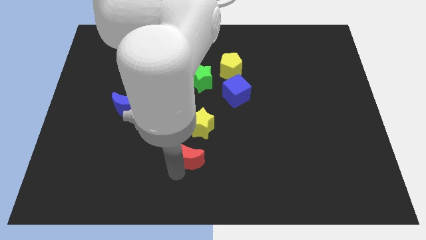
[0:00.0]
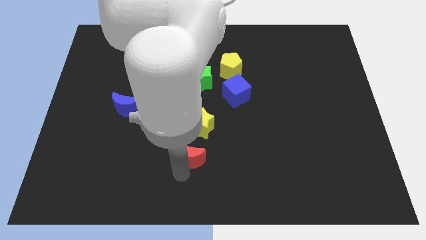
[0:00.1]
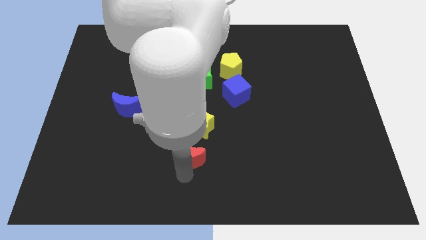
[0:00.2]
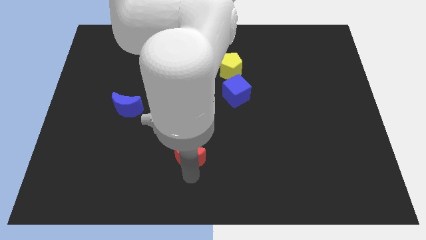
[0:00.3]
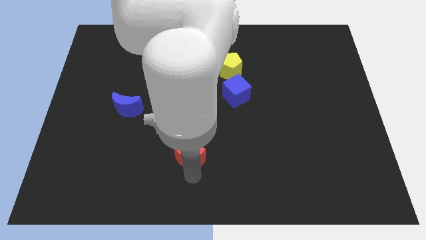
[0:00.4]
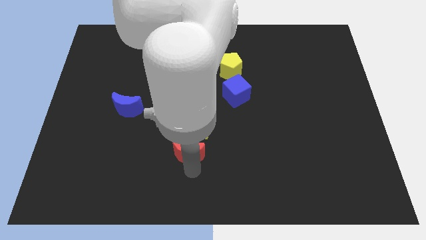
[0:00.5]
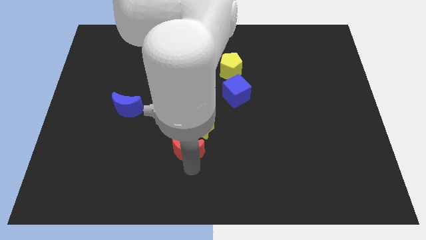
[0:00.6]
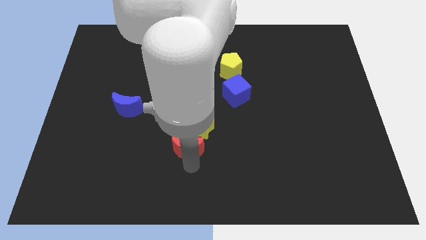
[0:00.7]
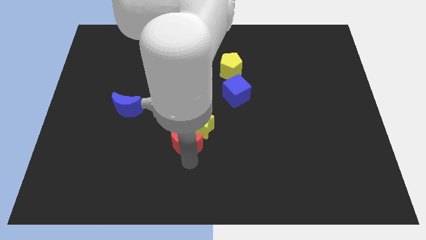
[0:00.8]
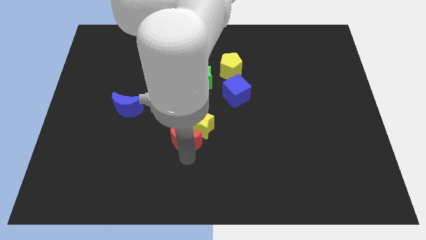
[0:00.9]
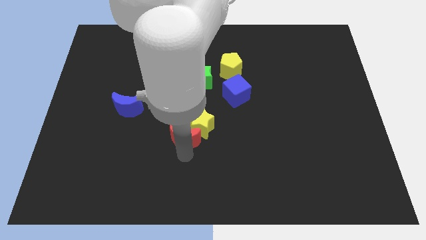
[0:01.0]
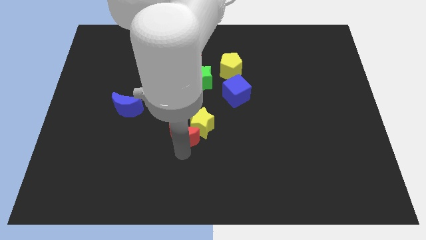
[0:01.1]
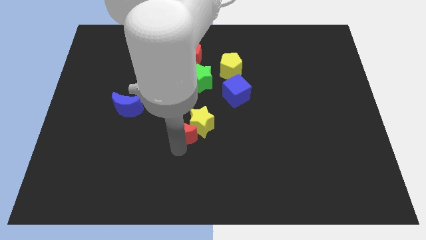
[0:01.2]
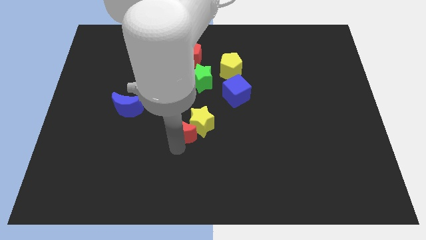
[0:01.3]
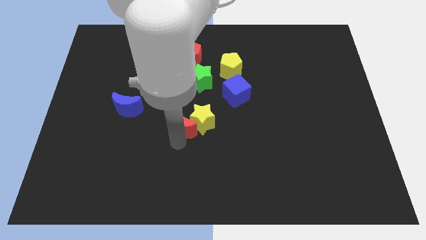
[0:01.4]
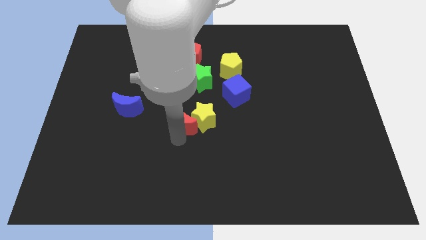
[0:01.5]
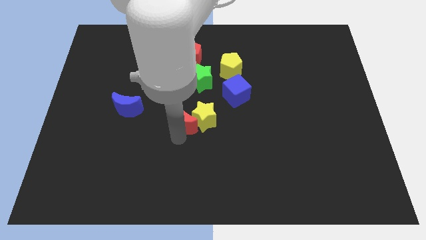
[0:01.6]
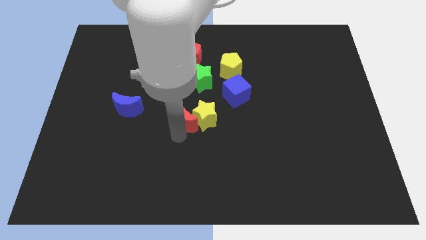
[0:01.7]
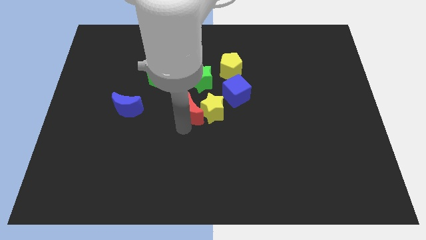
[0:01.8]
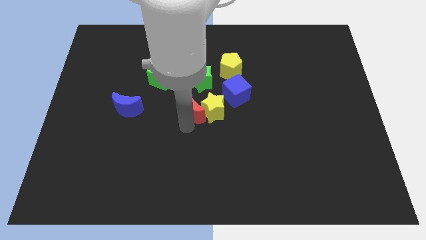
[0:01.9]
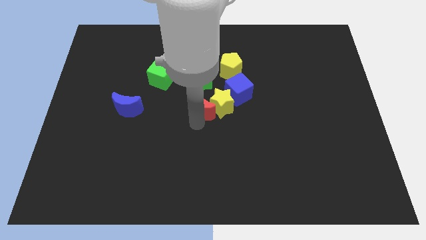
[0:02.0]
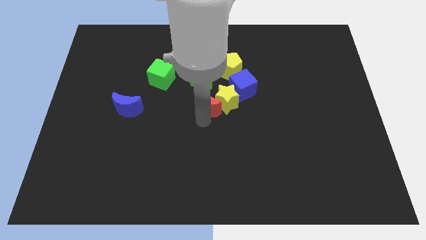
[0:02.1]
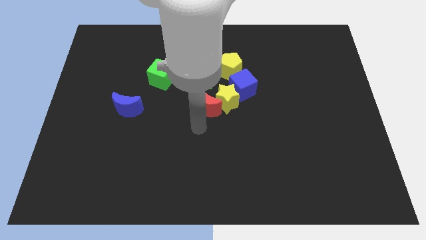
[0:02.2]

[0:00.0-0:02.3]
push red crescent below green star

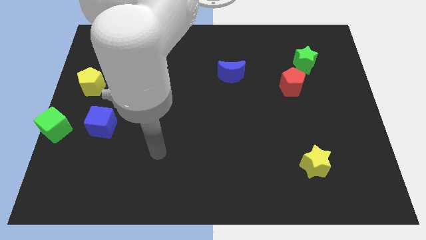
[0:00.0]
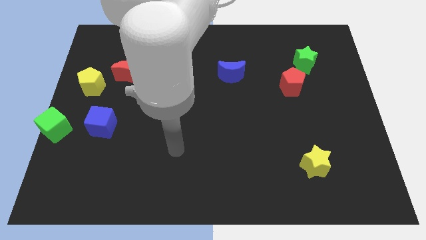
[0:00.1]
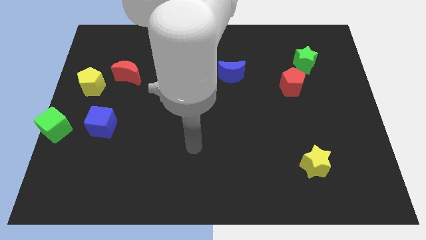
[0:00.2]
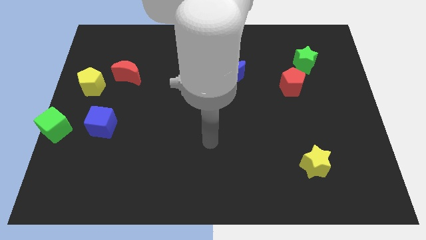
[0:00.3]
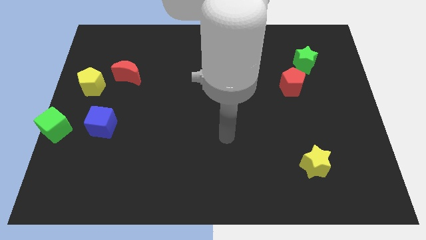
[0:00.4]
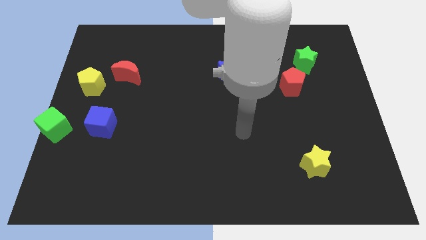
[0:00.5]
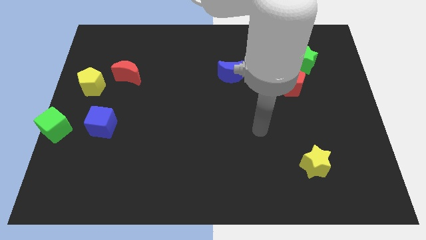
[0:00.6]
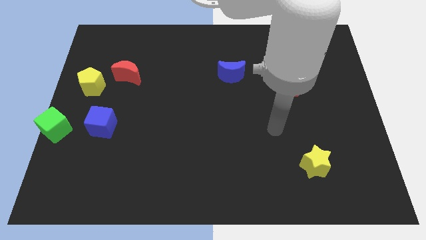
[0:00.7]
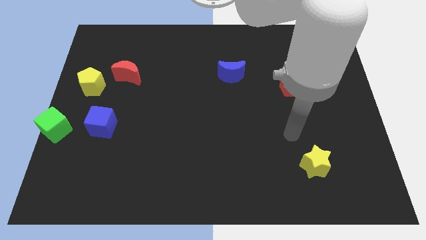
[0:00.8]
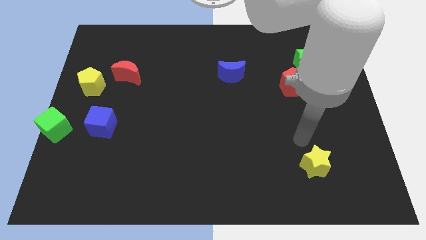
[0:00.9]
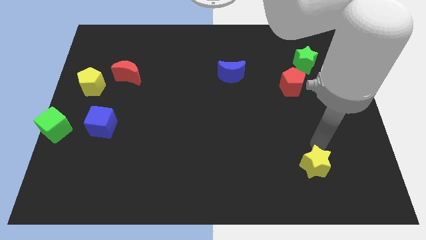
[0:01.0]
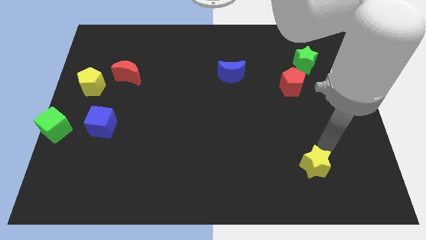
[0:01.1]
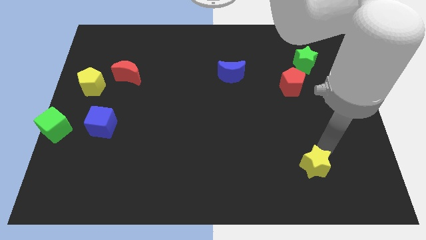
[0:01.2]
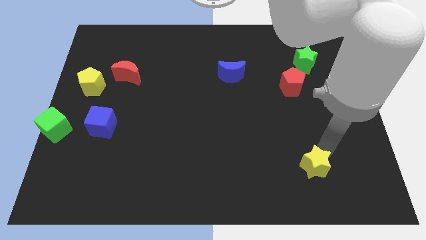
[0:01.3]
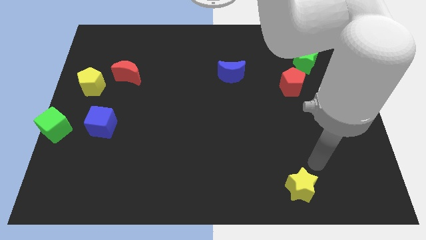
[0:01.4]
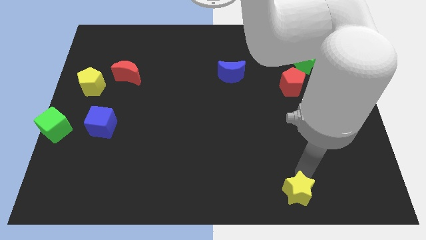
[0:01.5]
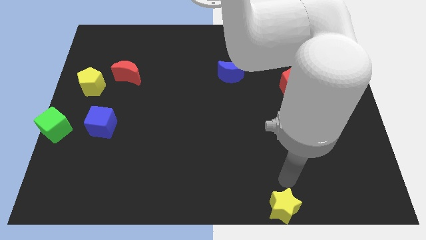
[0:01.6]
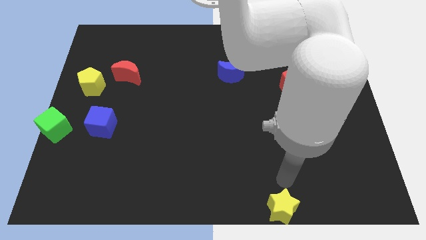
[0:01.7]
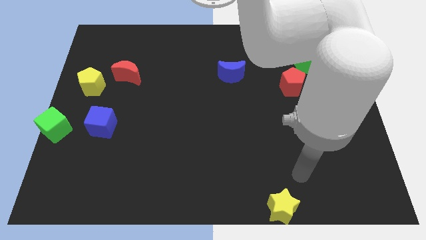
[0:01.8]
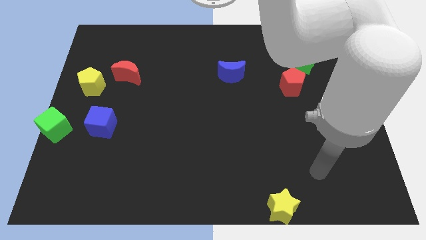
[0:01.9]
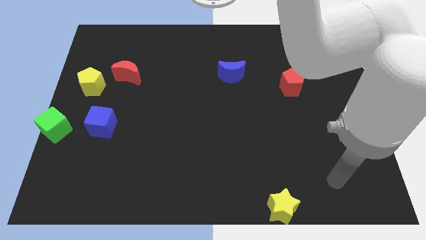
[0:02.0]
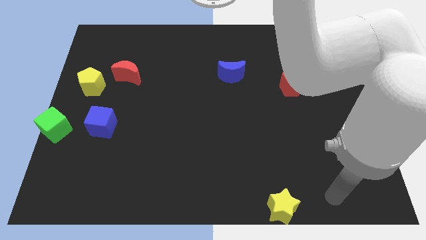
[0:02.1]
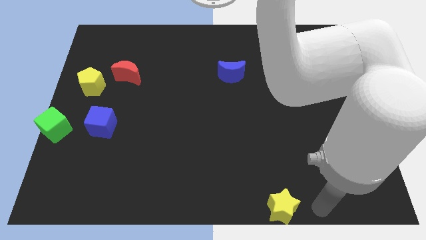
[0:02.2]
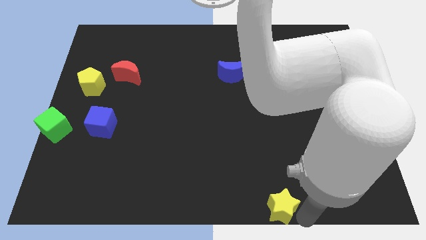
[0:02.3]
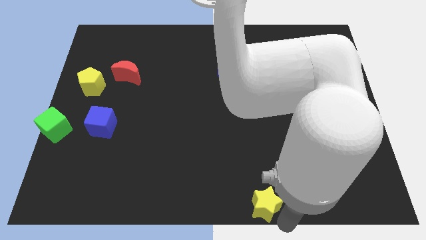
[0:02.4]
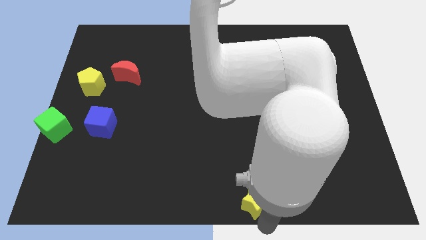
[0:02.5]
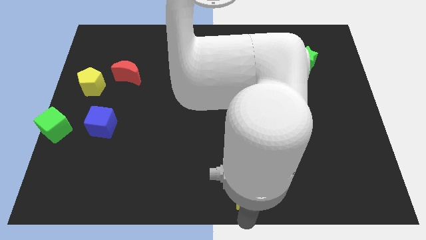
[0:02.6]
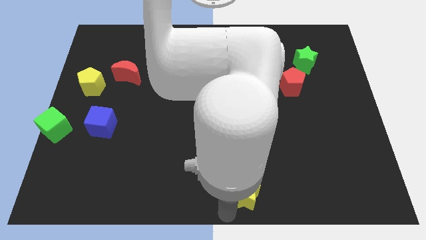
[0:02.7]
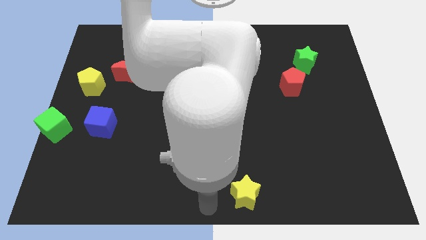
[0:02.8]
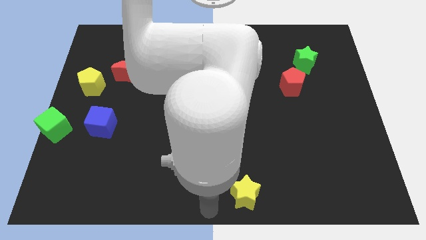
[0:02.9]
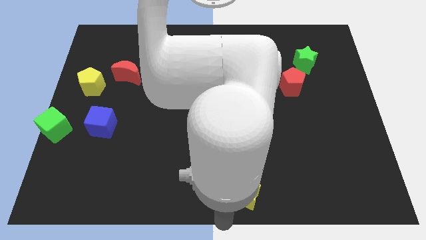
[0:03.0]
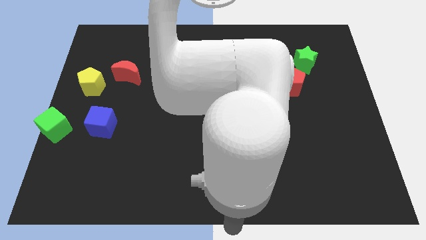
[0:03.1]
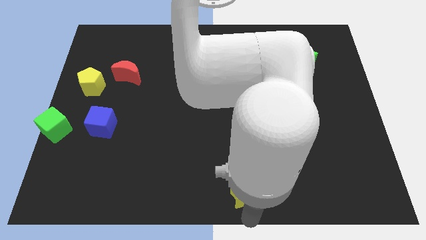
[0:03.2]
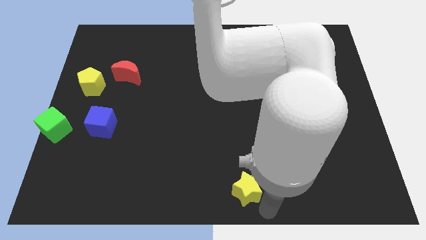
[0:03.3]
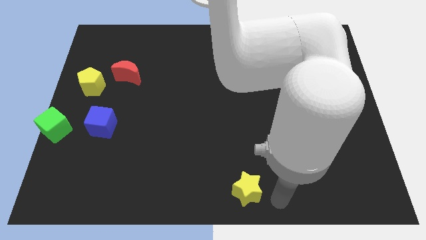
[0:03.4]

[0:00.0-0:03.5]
place your arm to right side of yellow star

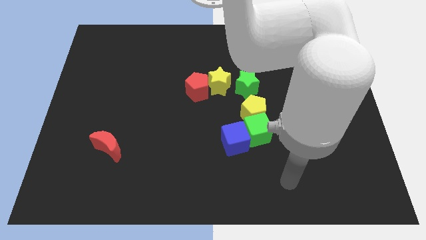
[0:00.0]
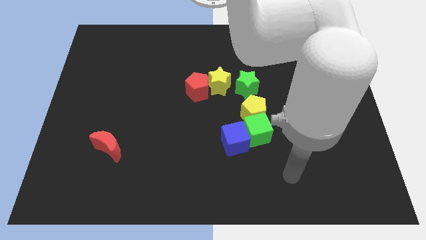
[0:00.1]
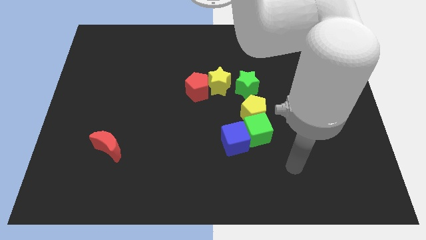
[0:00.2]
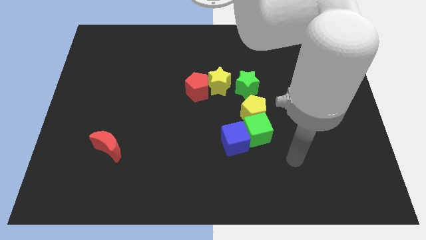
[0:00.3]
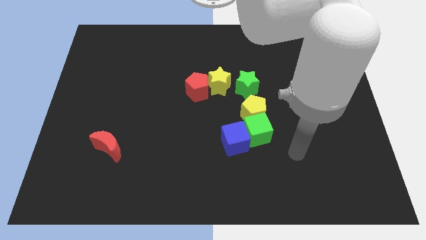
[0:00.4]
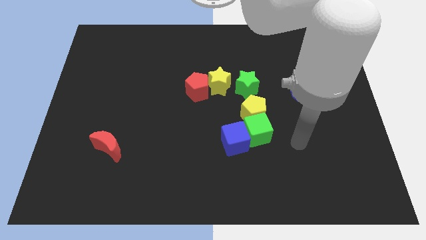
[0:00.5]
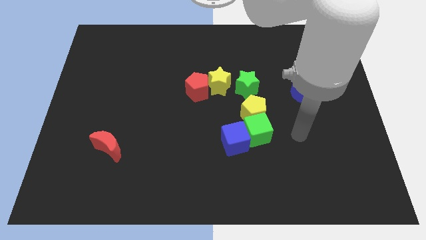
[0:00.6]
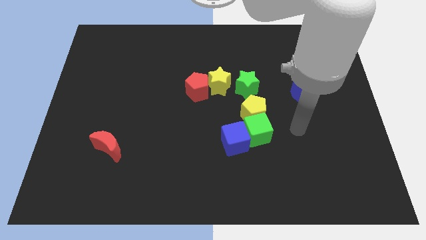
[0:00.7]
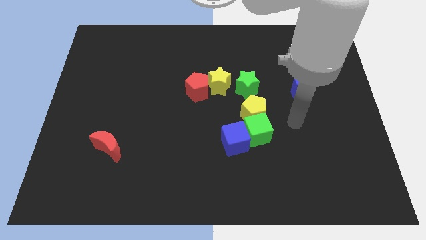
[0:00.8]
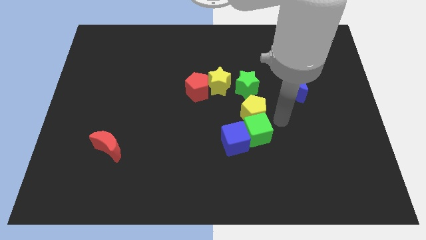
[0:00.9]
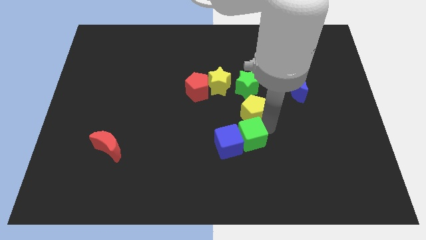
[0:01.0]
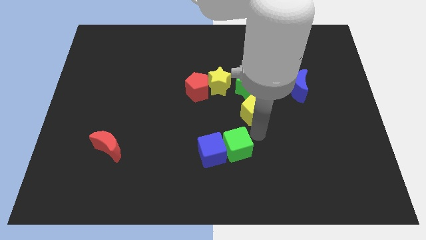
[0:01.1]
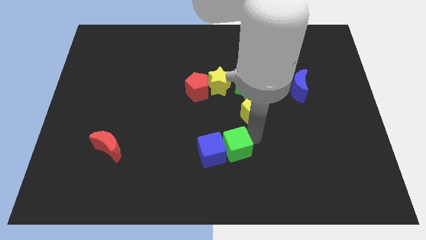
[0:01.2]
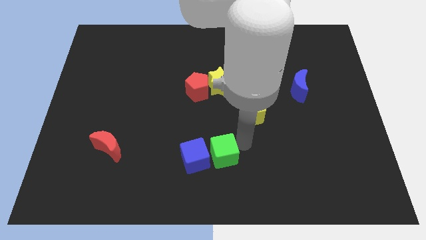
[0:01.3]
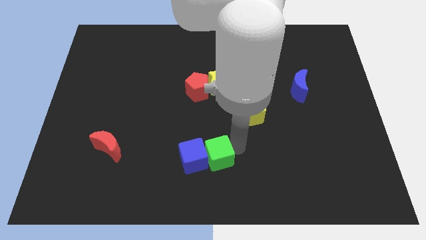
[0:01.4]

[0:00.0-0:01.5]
move the blue cube and green cube slightly to the left

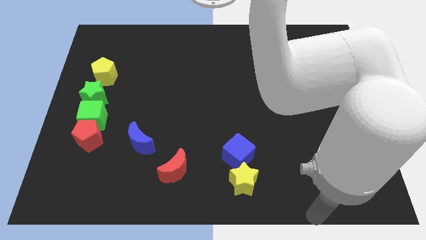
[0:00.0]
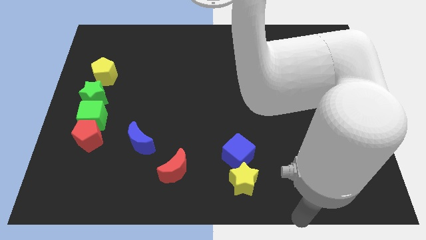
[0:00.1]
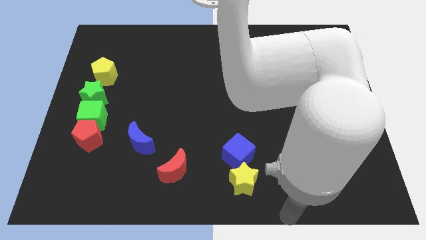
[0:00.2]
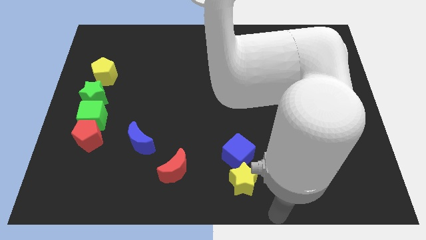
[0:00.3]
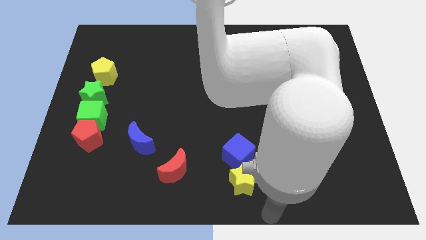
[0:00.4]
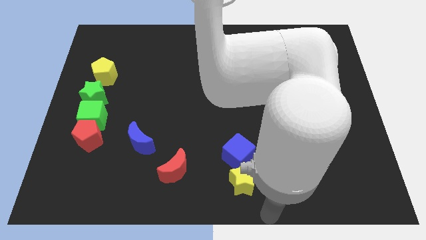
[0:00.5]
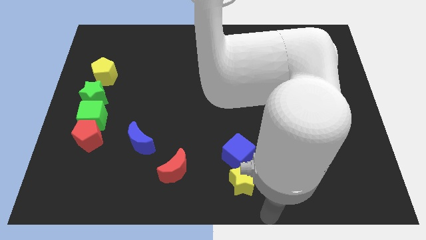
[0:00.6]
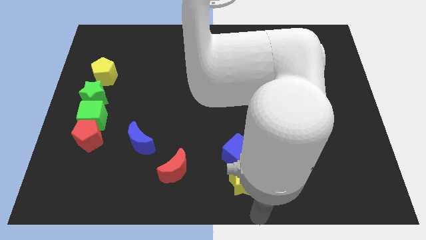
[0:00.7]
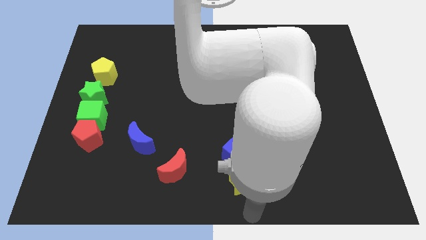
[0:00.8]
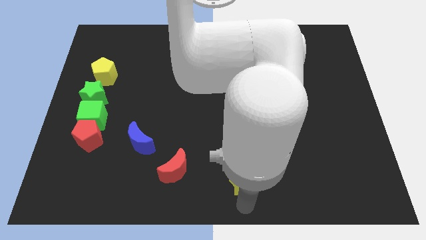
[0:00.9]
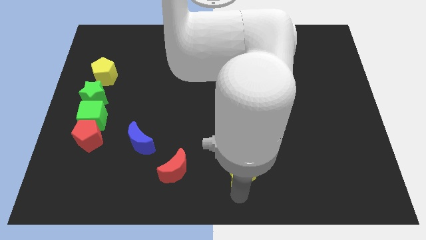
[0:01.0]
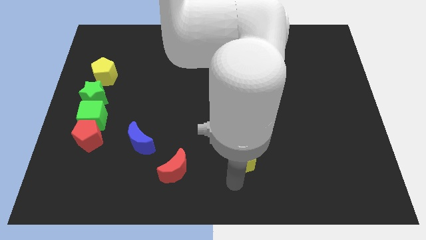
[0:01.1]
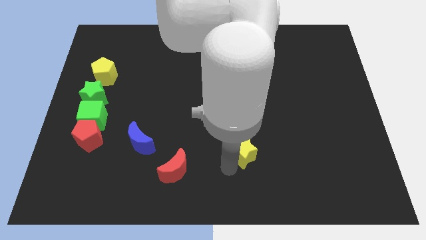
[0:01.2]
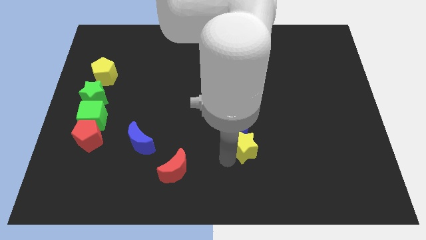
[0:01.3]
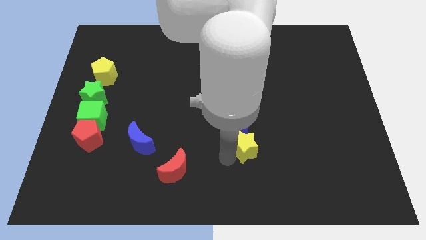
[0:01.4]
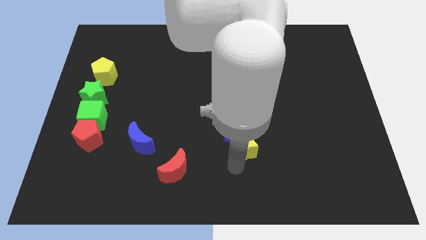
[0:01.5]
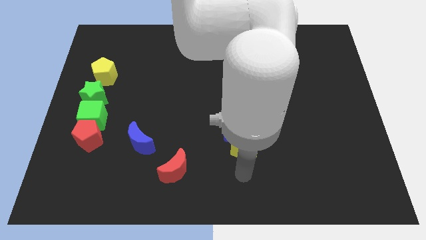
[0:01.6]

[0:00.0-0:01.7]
push yellow star into the blue cube

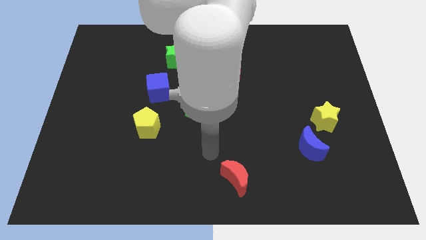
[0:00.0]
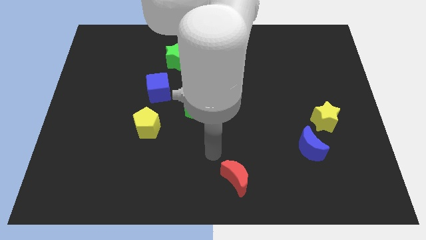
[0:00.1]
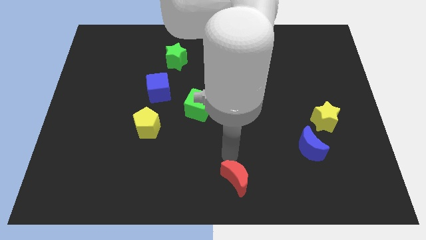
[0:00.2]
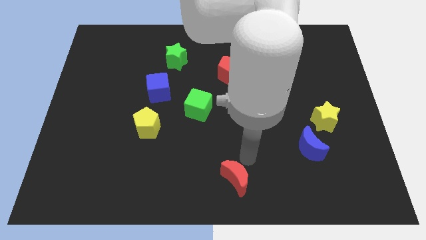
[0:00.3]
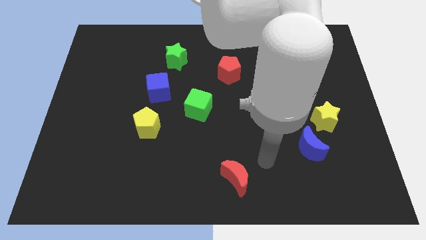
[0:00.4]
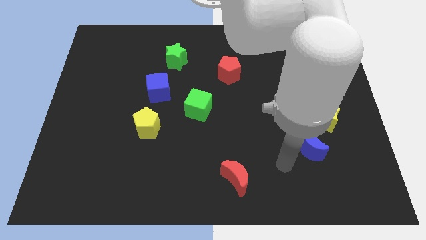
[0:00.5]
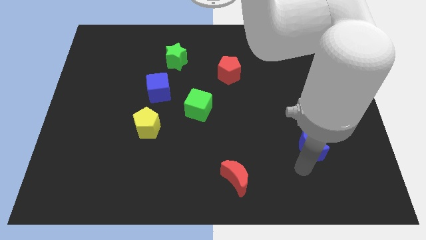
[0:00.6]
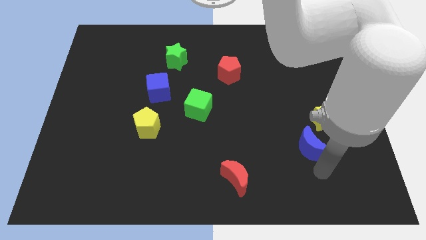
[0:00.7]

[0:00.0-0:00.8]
move your arm to the bottom of blue crescent
